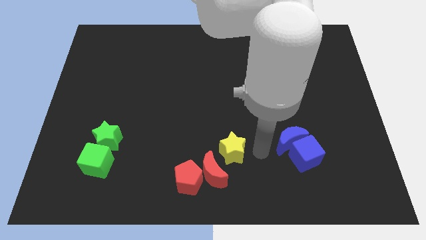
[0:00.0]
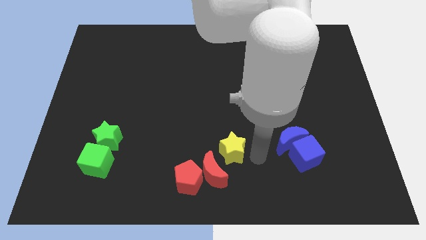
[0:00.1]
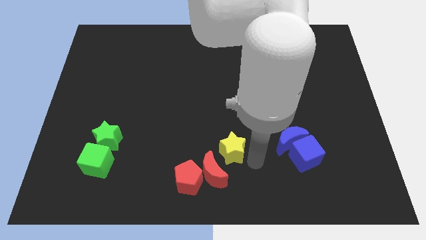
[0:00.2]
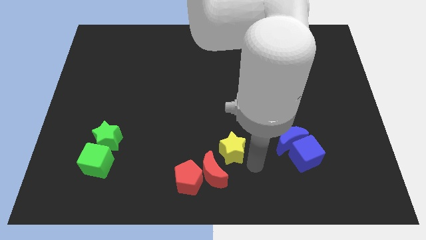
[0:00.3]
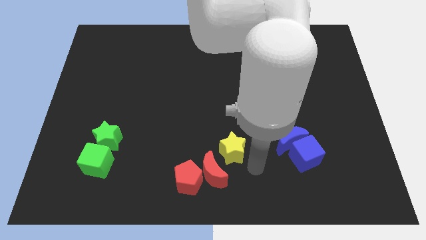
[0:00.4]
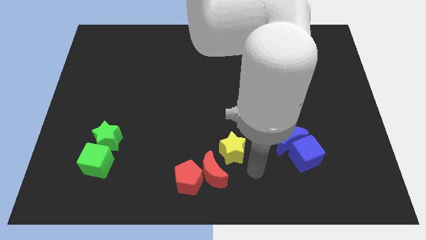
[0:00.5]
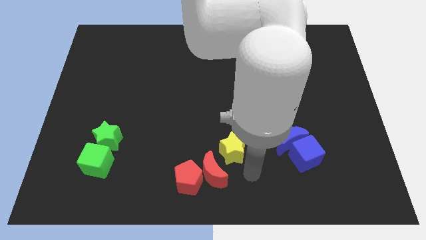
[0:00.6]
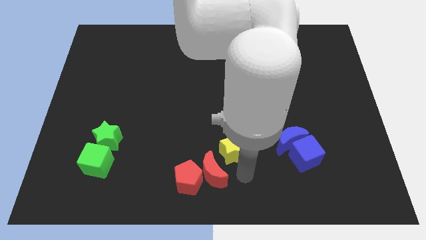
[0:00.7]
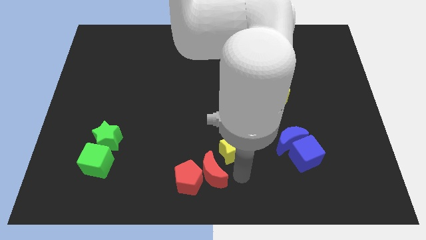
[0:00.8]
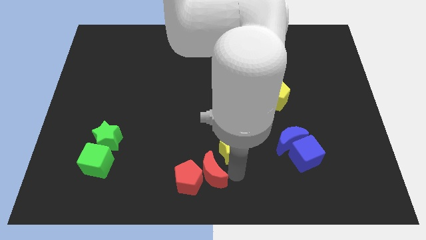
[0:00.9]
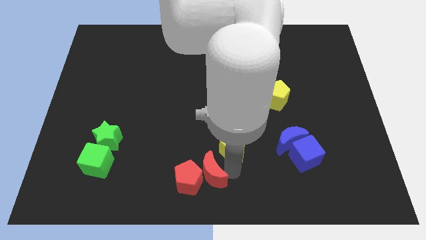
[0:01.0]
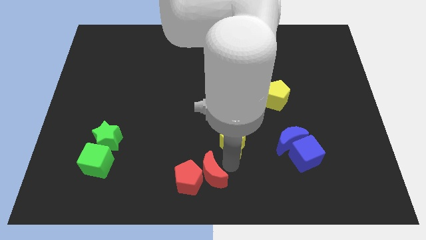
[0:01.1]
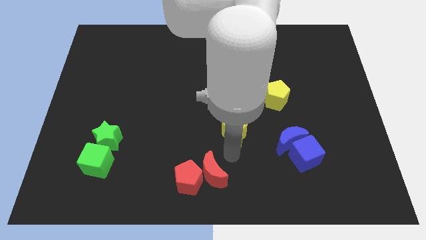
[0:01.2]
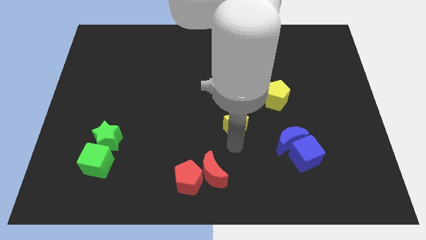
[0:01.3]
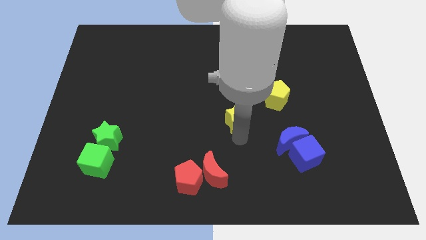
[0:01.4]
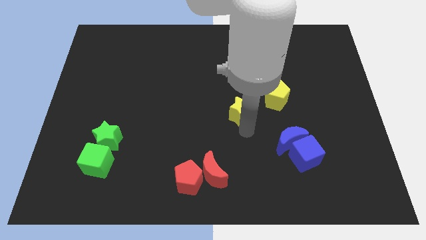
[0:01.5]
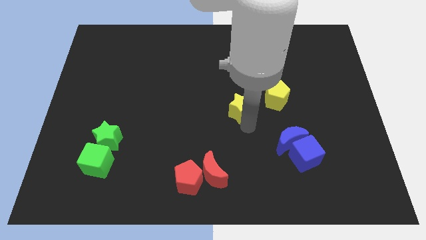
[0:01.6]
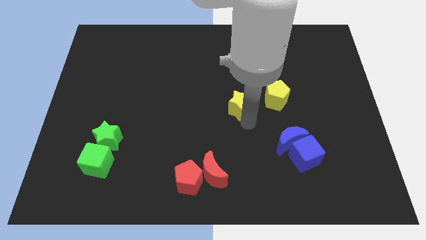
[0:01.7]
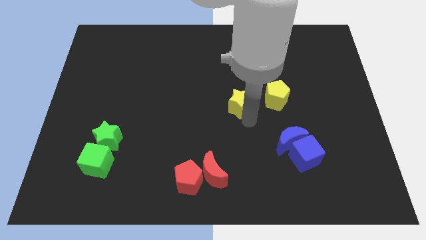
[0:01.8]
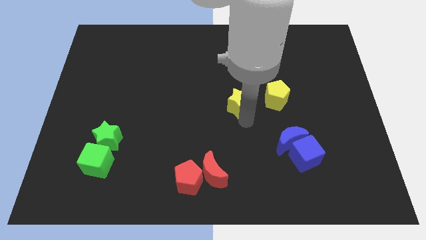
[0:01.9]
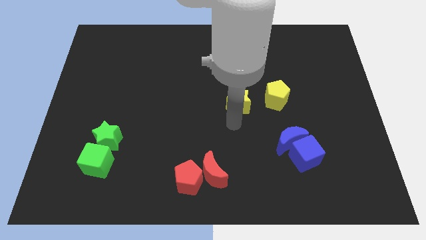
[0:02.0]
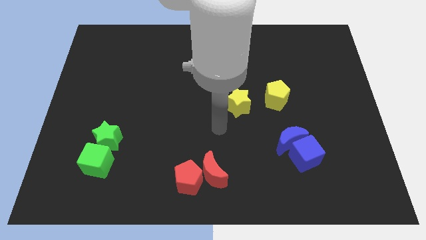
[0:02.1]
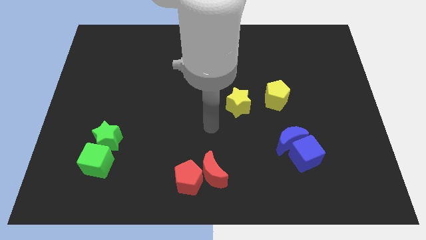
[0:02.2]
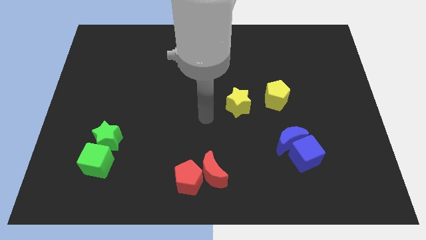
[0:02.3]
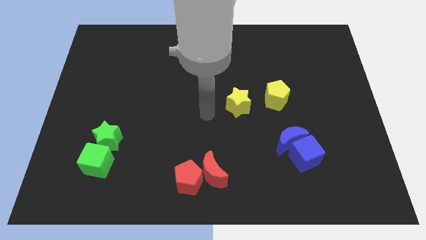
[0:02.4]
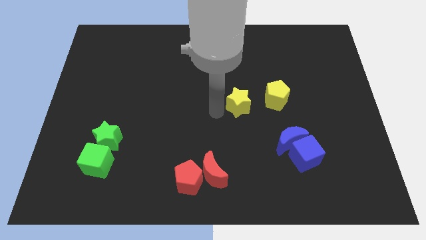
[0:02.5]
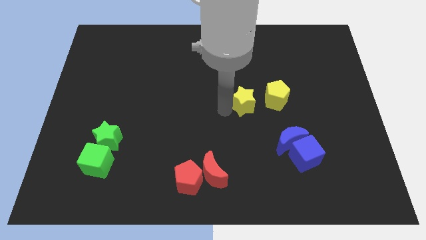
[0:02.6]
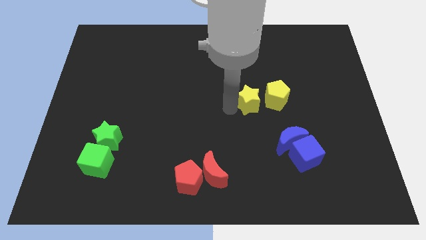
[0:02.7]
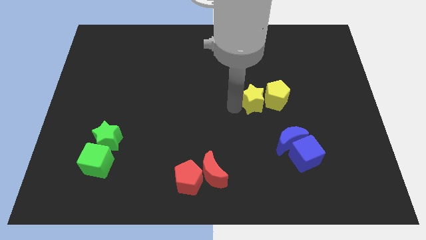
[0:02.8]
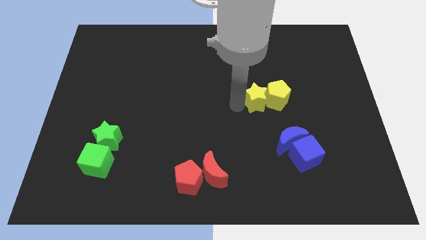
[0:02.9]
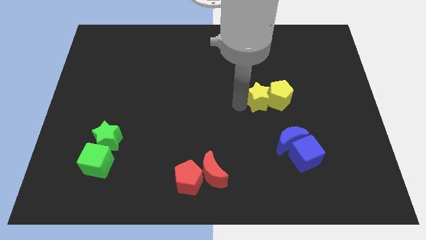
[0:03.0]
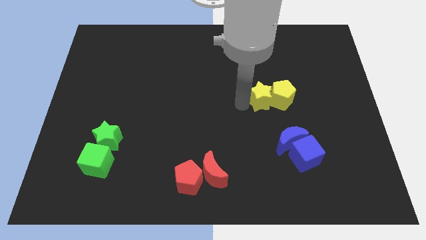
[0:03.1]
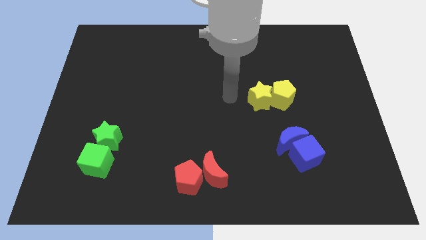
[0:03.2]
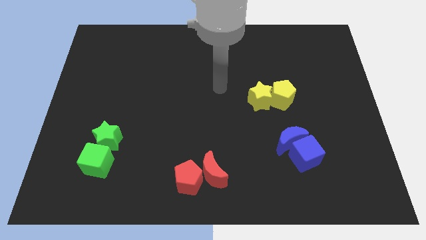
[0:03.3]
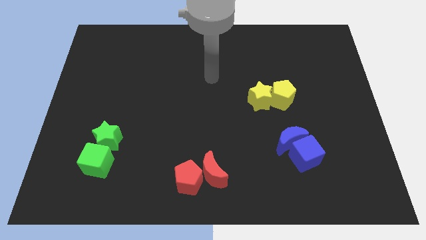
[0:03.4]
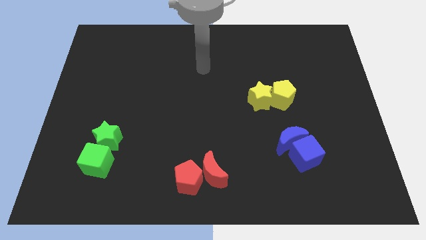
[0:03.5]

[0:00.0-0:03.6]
push the yellow star into the yellow pentagon

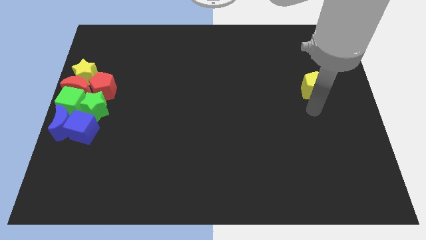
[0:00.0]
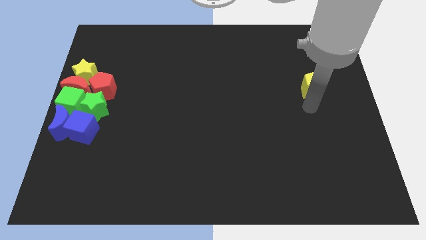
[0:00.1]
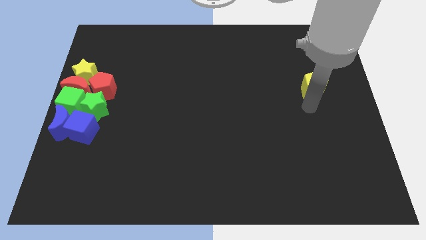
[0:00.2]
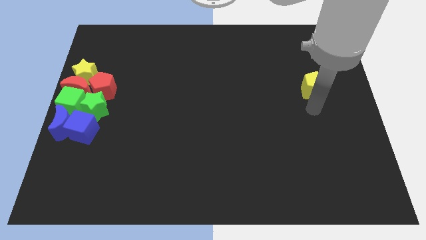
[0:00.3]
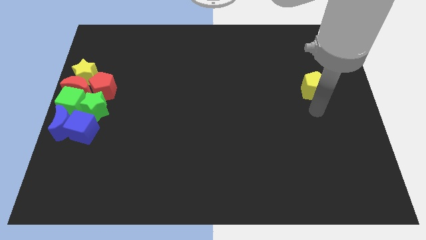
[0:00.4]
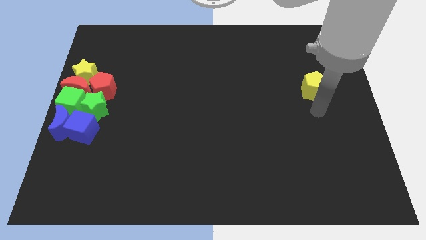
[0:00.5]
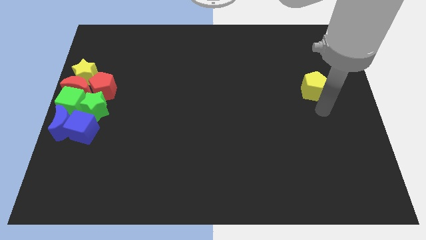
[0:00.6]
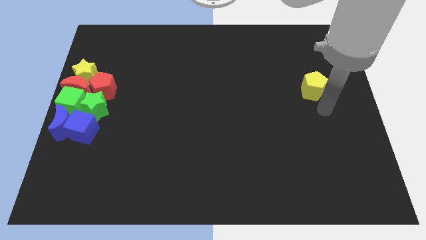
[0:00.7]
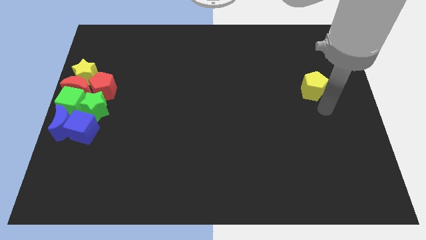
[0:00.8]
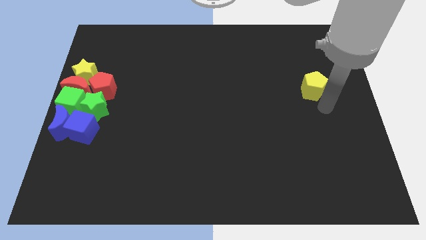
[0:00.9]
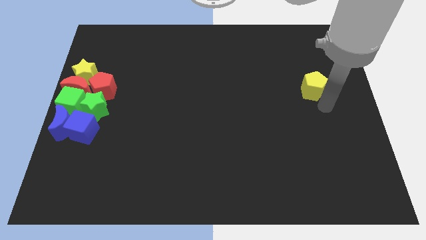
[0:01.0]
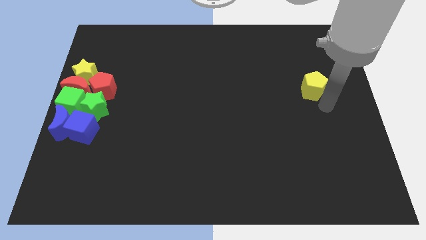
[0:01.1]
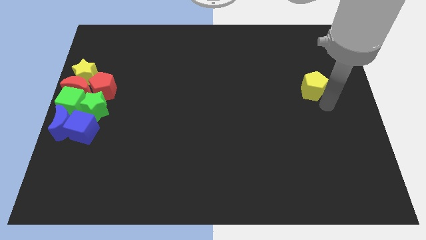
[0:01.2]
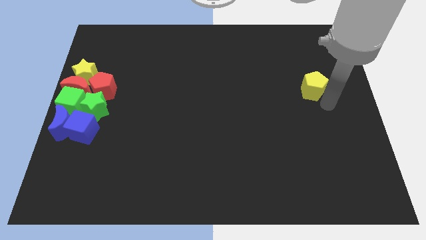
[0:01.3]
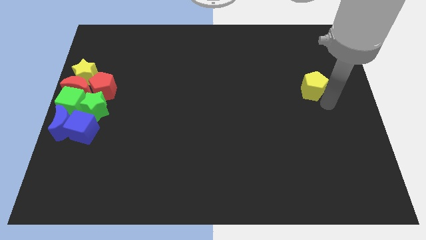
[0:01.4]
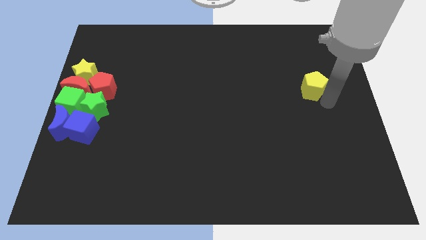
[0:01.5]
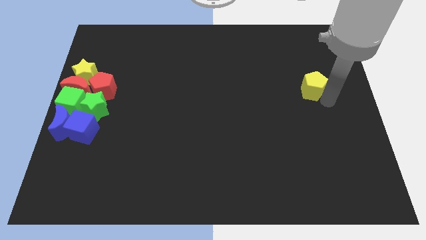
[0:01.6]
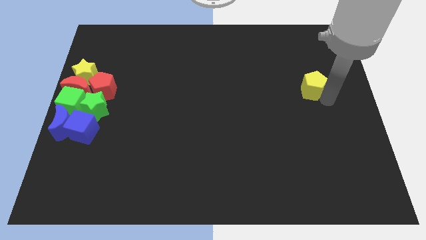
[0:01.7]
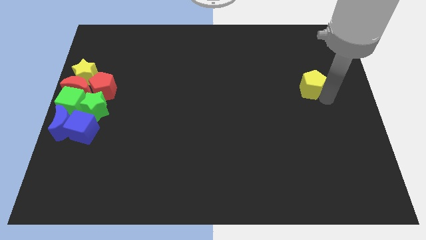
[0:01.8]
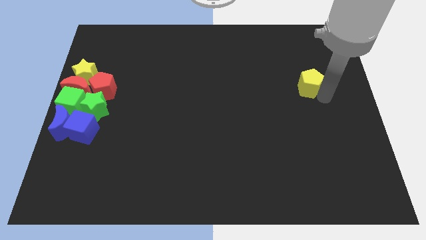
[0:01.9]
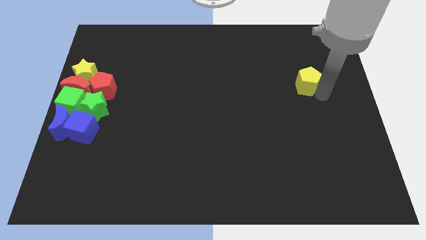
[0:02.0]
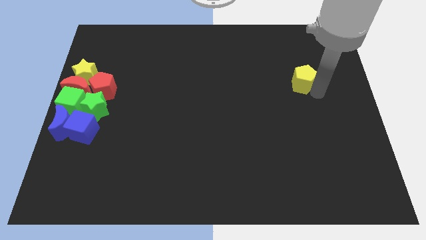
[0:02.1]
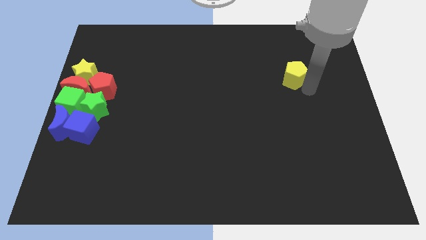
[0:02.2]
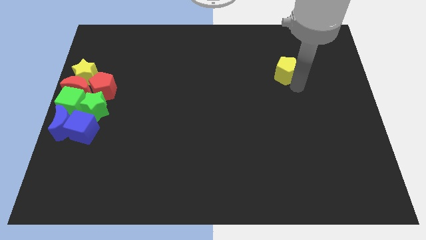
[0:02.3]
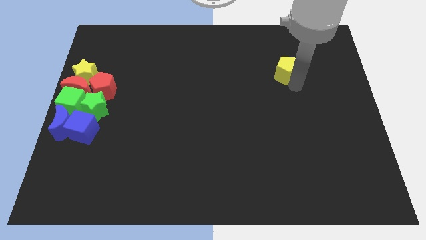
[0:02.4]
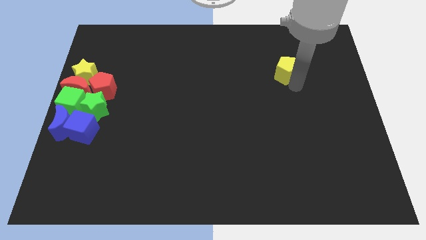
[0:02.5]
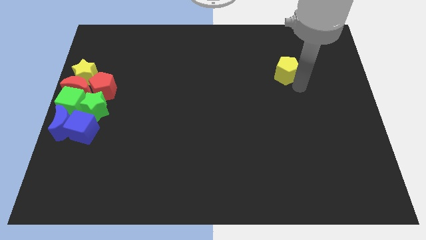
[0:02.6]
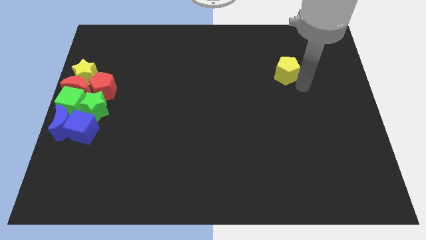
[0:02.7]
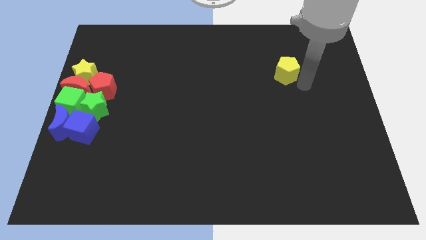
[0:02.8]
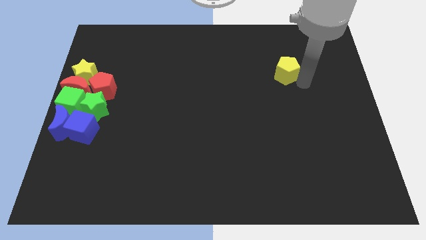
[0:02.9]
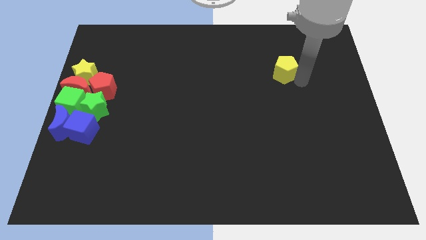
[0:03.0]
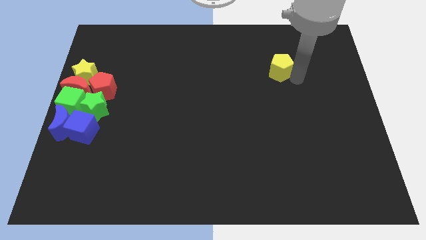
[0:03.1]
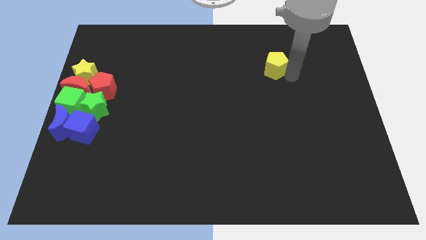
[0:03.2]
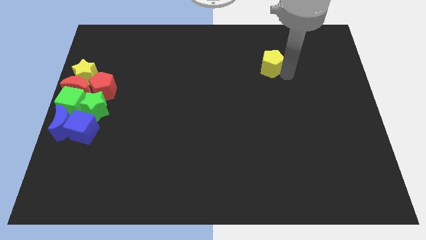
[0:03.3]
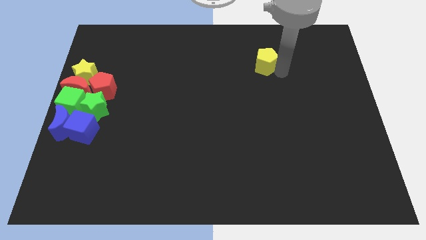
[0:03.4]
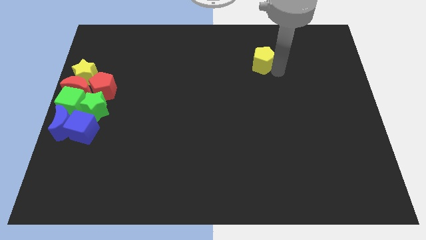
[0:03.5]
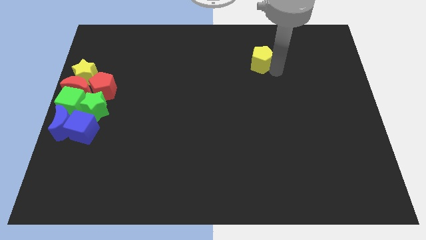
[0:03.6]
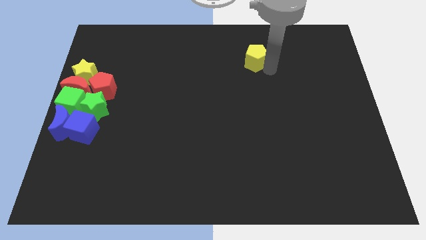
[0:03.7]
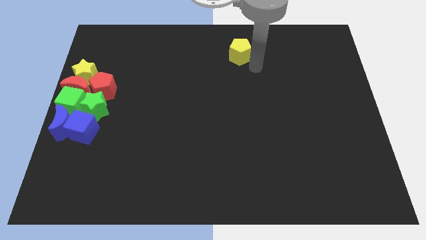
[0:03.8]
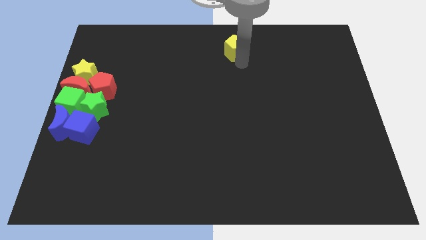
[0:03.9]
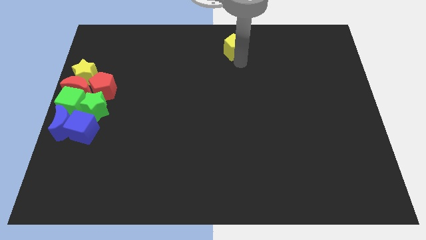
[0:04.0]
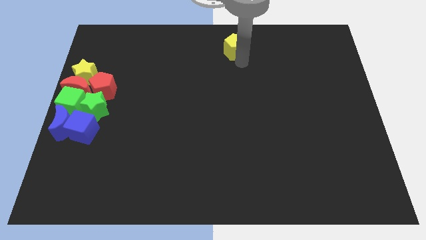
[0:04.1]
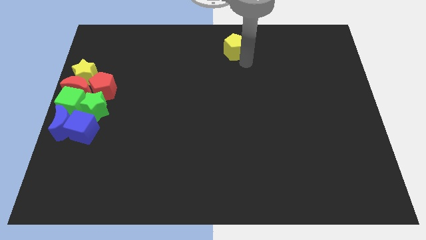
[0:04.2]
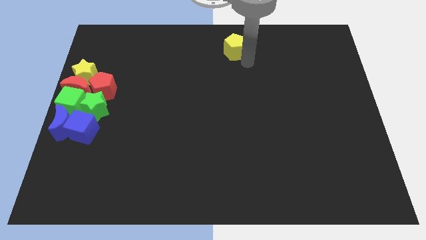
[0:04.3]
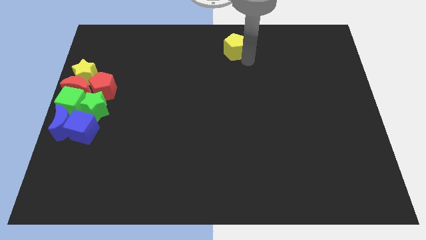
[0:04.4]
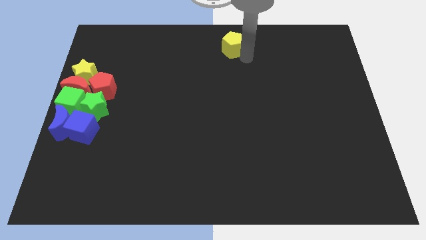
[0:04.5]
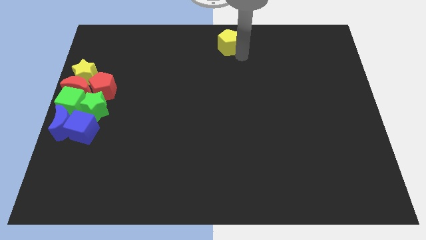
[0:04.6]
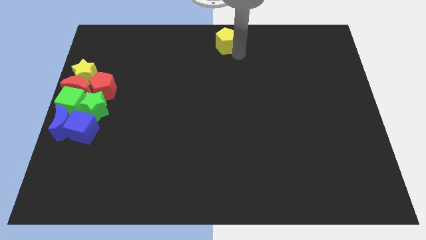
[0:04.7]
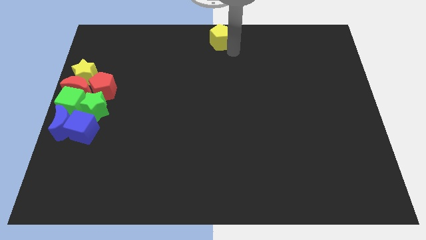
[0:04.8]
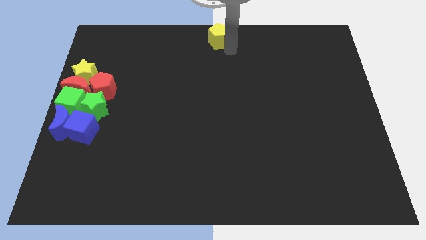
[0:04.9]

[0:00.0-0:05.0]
push the yellow pentagon to the top center of the board

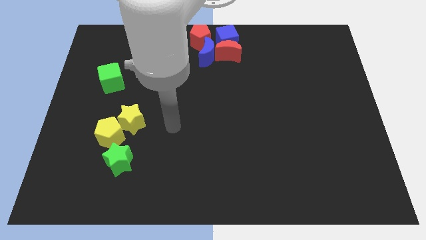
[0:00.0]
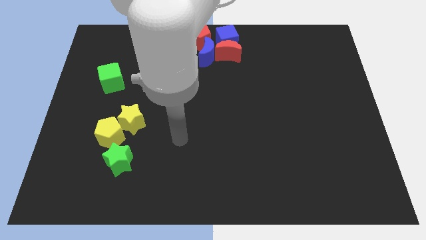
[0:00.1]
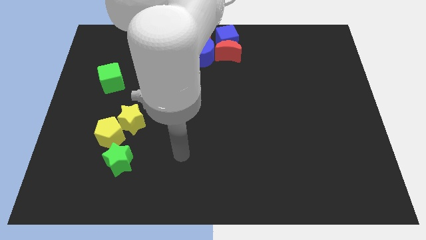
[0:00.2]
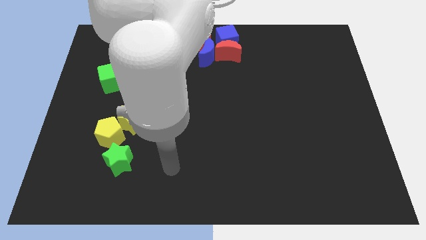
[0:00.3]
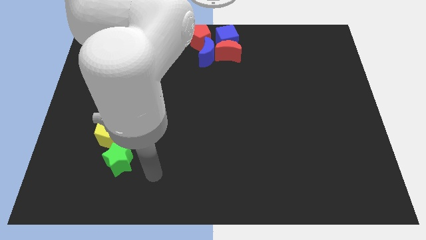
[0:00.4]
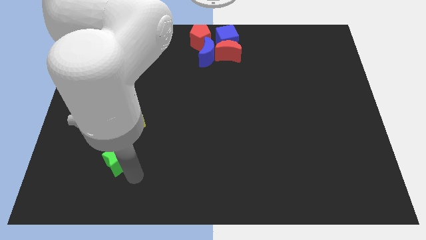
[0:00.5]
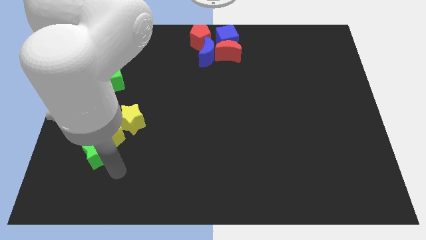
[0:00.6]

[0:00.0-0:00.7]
place the arm down to the green star
